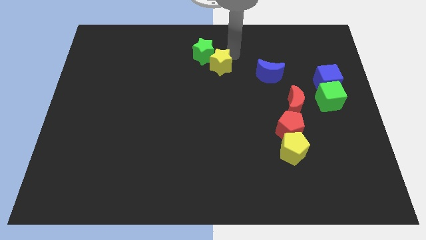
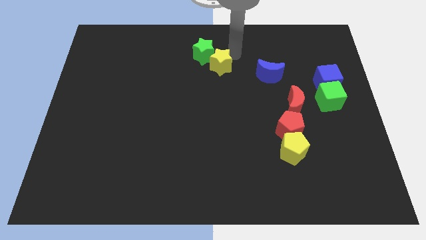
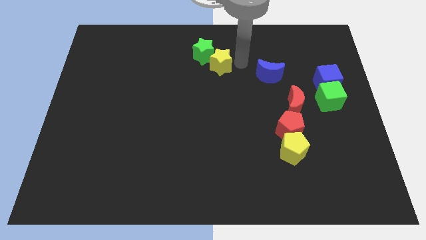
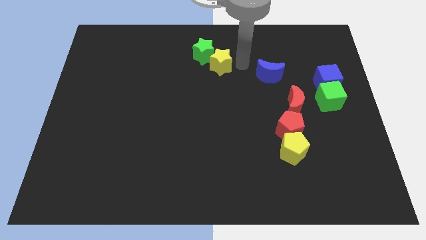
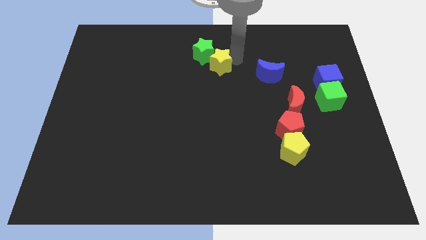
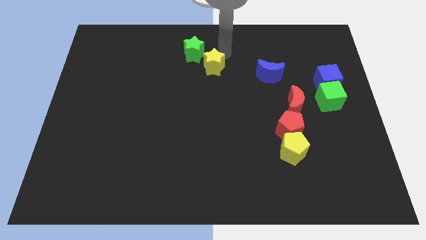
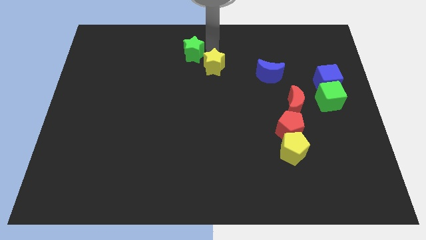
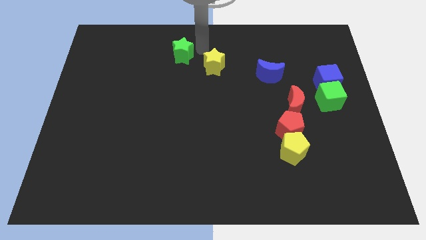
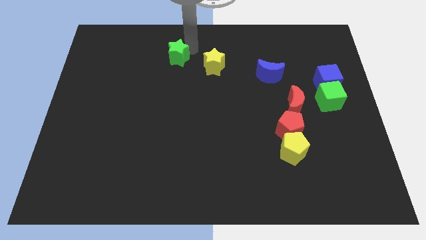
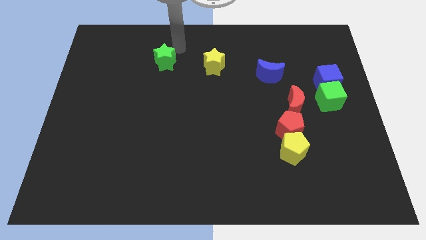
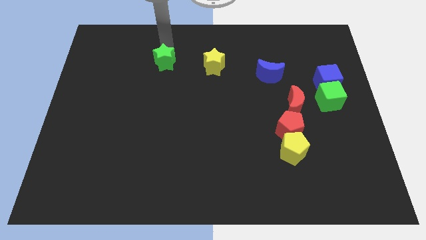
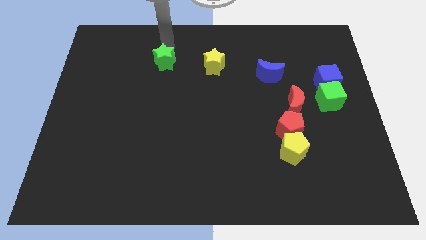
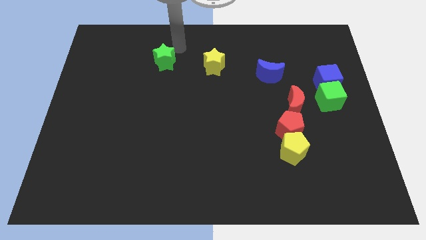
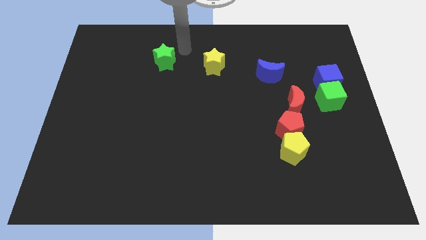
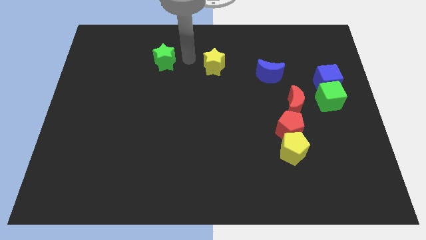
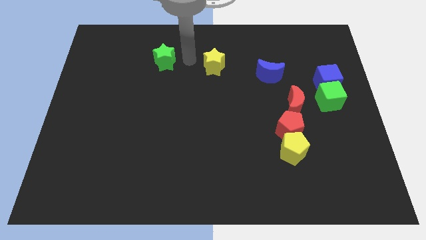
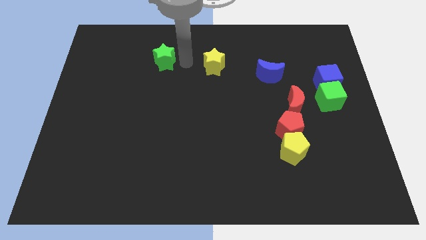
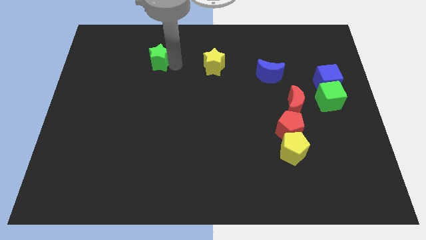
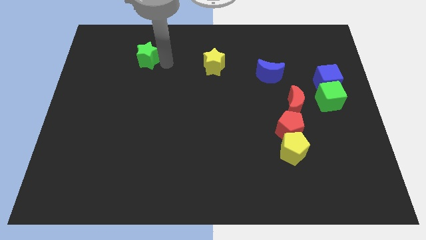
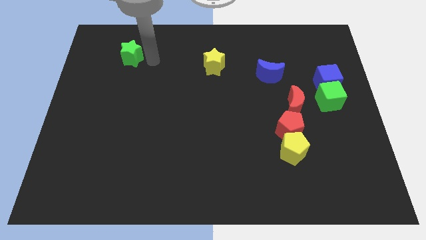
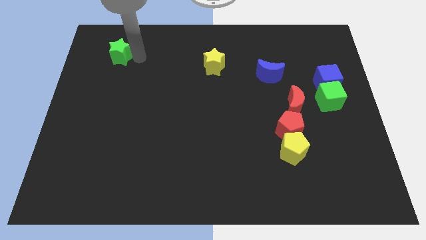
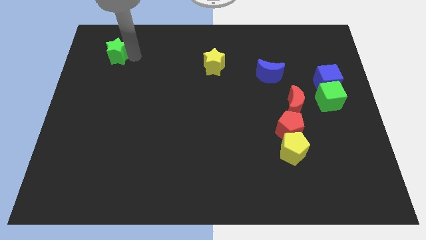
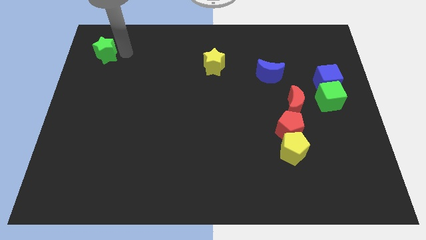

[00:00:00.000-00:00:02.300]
separate the green star from the yellow star

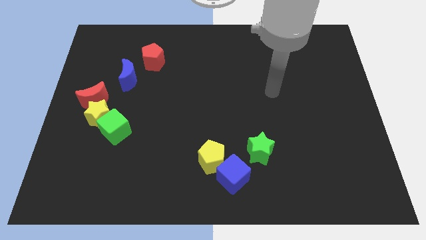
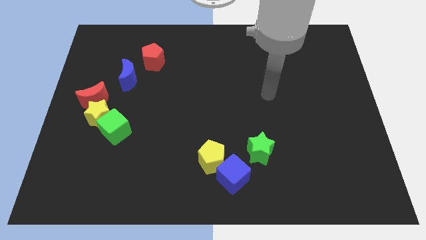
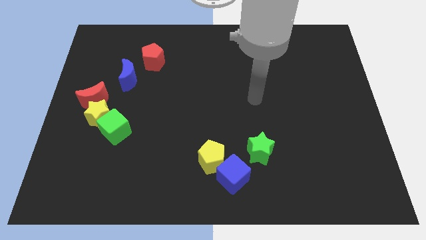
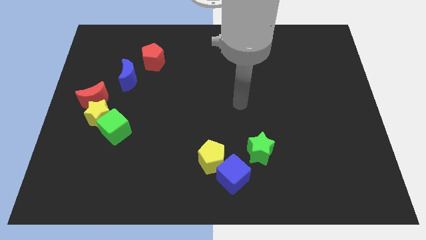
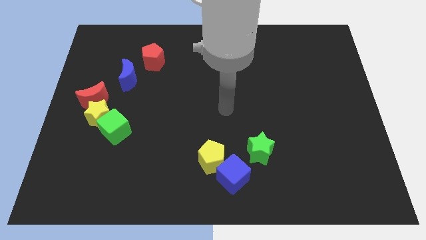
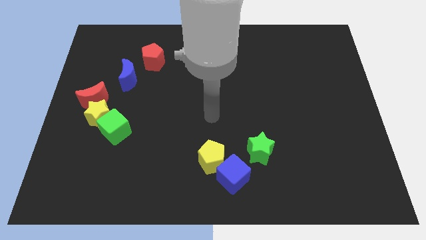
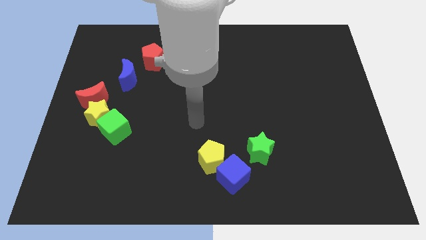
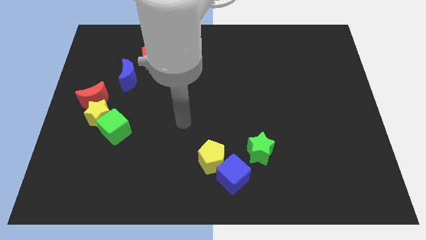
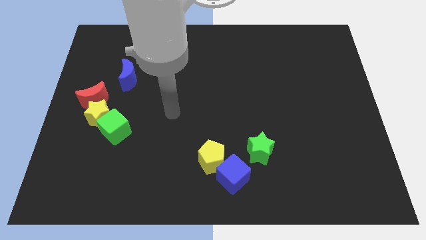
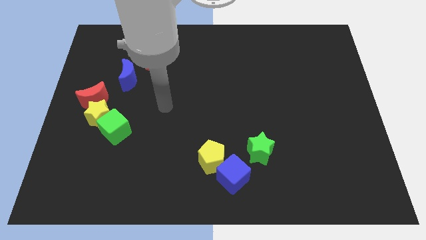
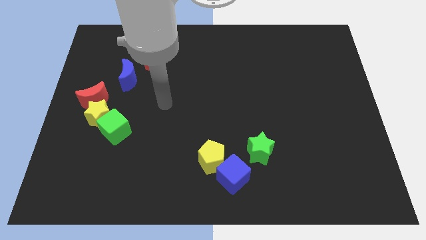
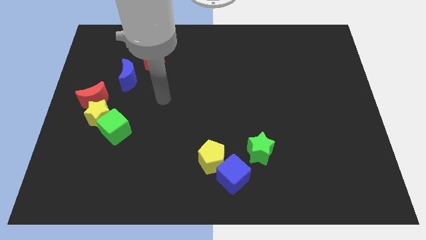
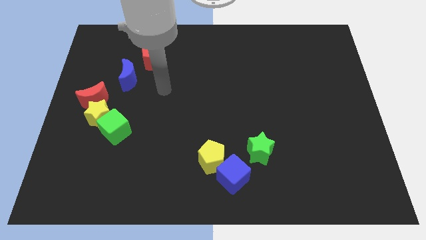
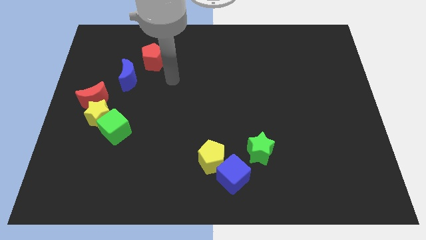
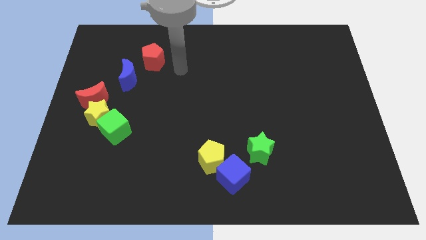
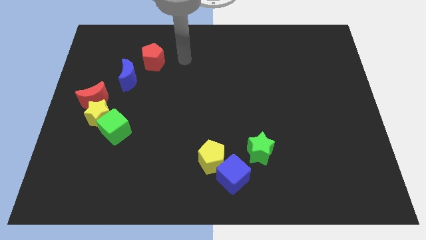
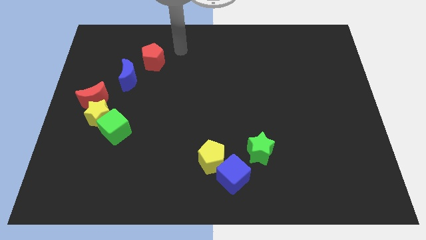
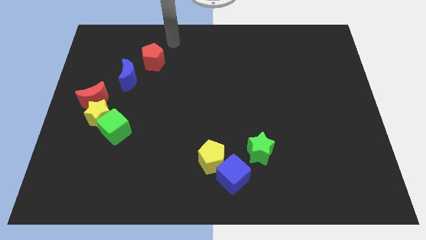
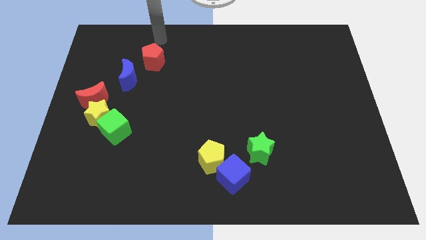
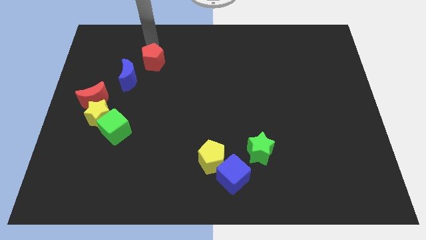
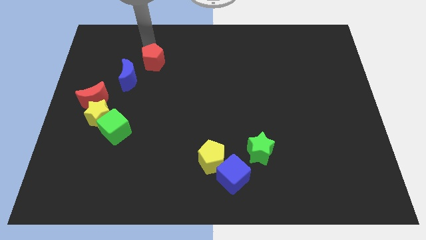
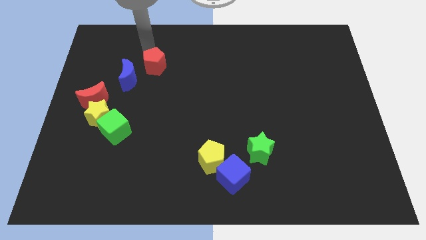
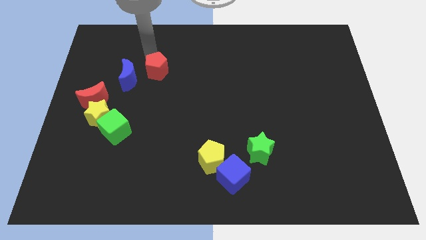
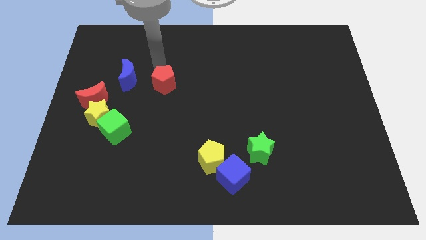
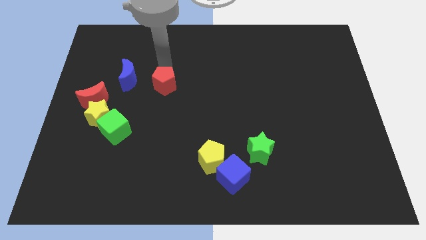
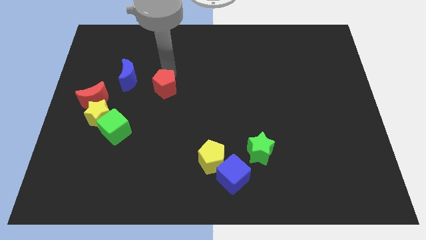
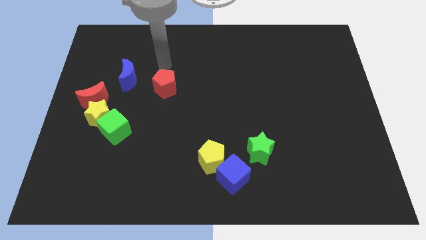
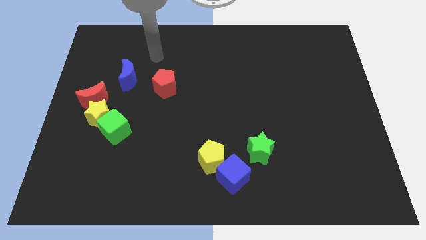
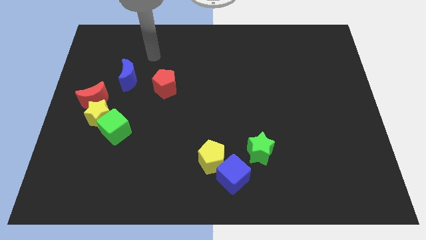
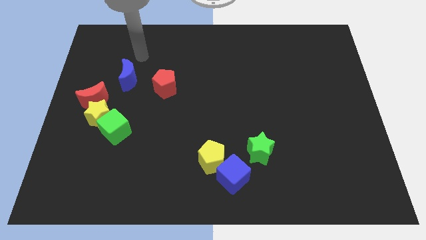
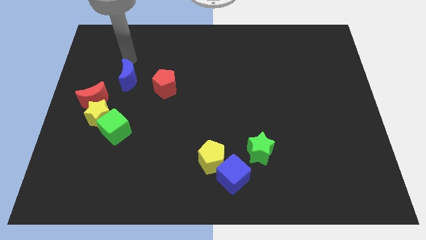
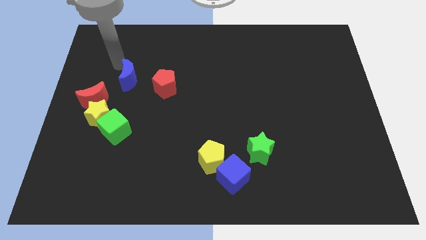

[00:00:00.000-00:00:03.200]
push the red pentagon slightly to the bottom side of the board

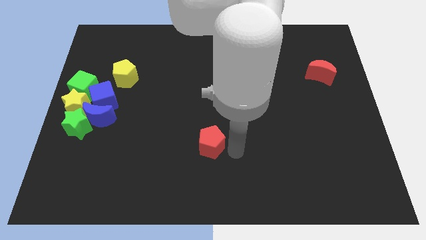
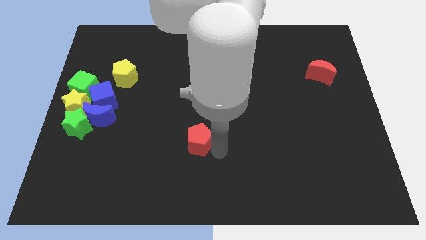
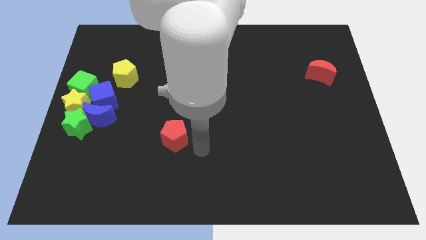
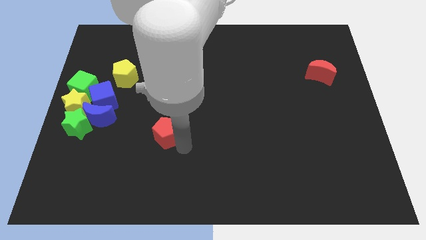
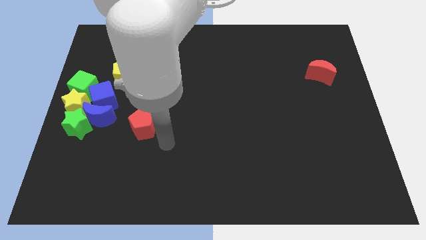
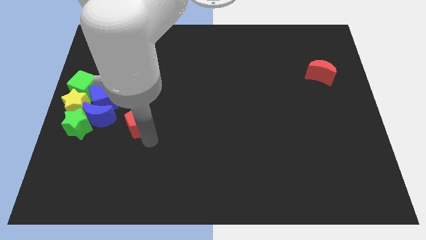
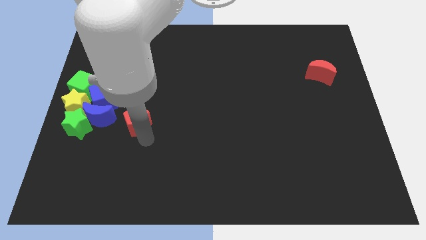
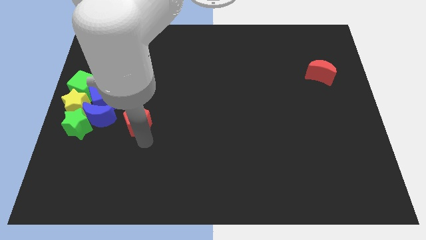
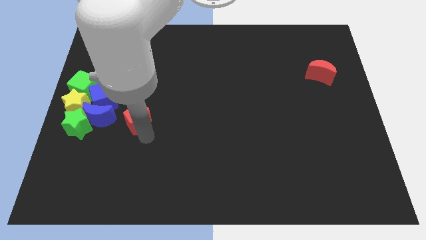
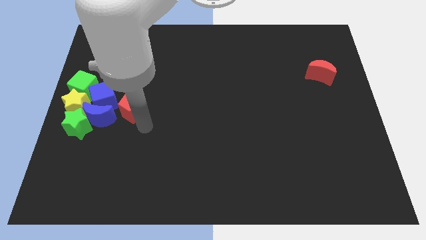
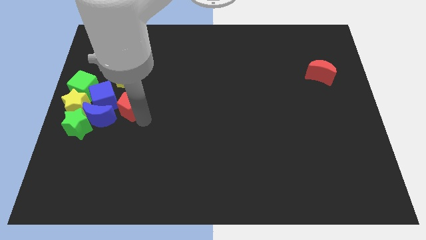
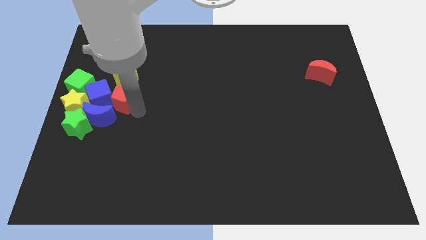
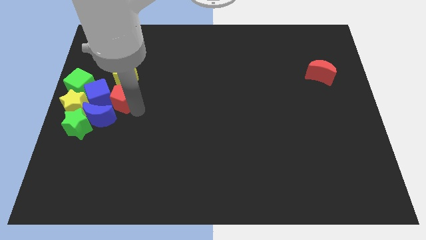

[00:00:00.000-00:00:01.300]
place the red pentagon right to the blue cube

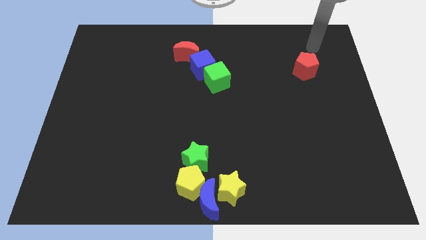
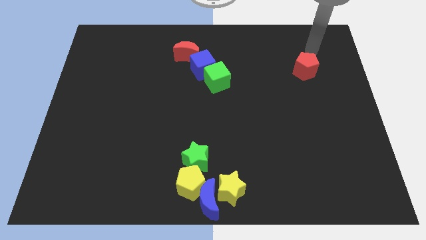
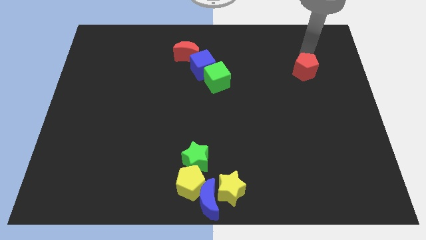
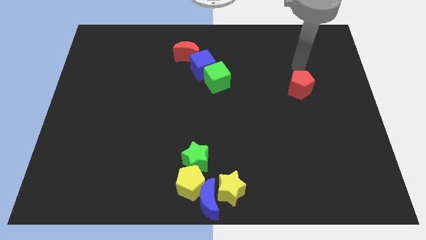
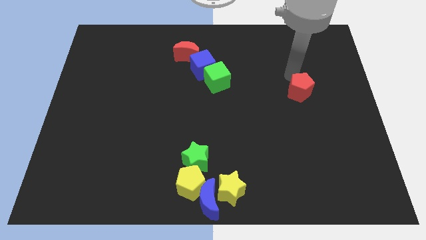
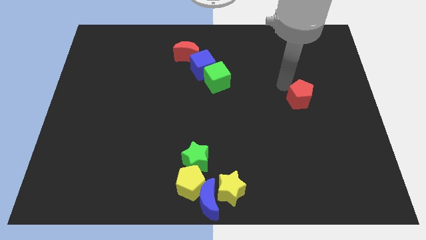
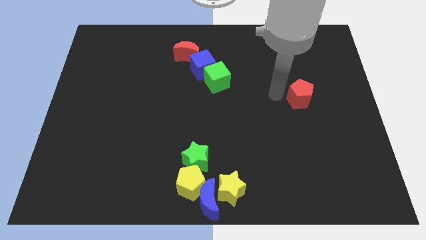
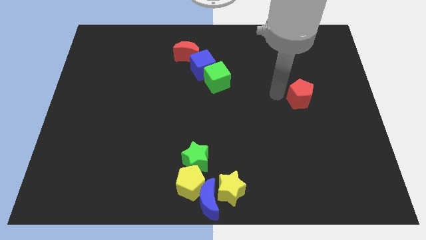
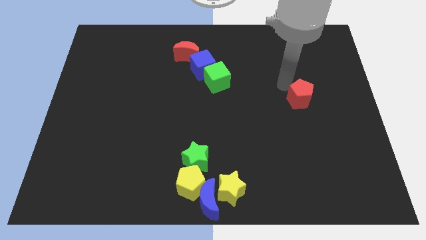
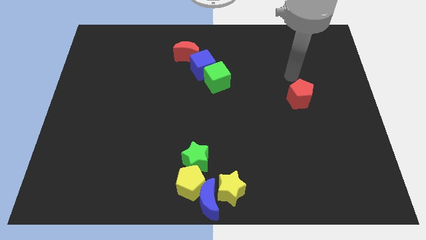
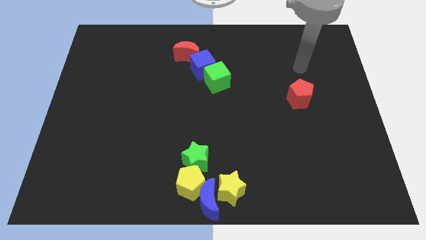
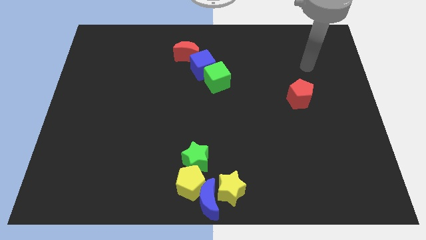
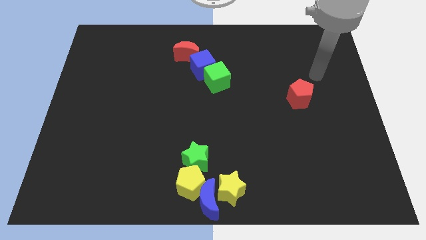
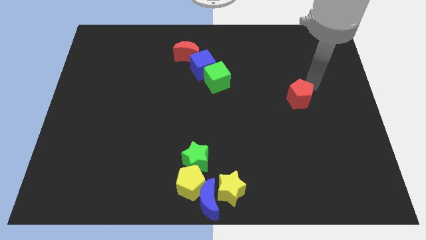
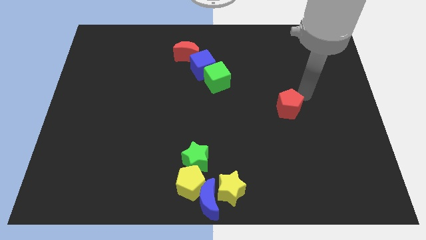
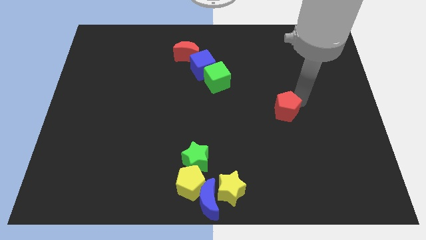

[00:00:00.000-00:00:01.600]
push the red pentagon towards the bottom side of the board

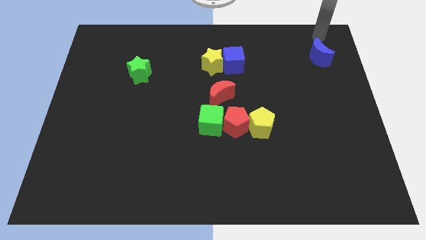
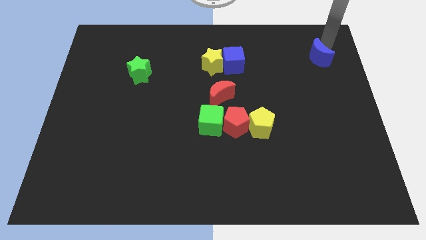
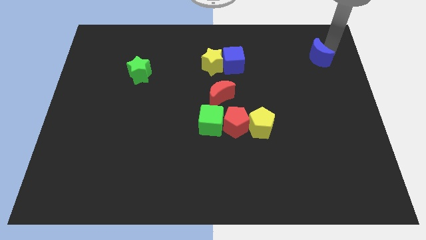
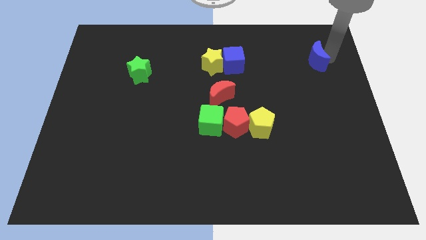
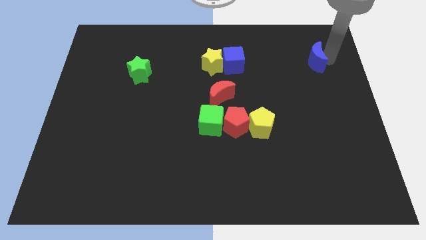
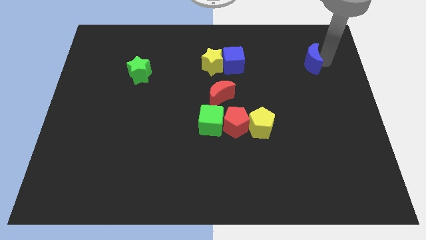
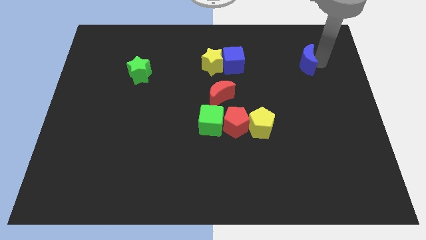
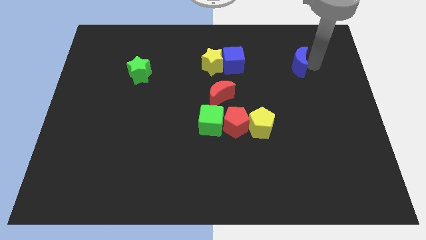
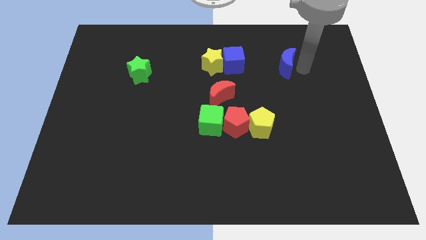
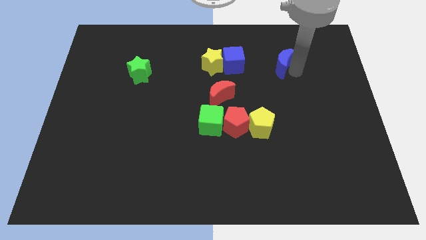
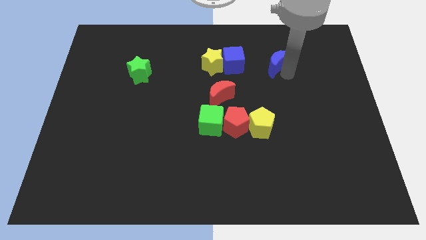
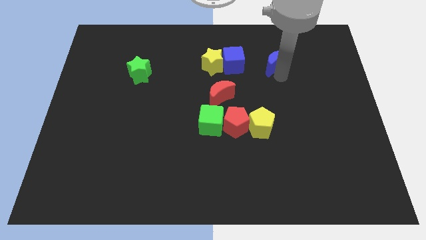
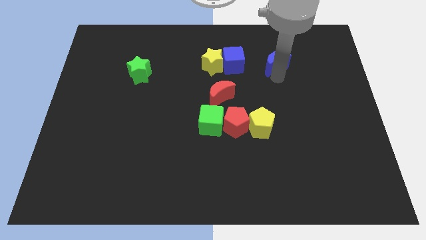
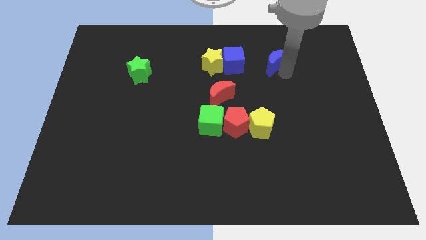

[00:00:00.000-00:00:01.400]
move the blue crescent to the right of the blue cube
